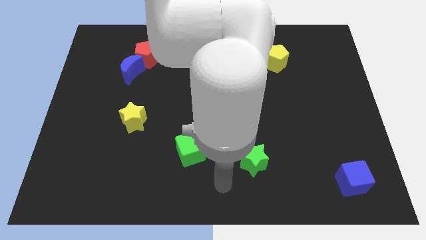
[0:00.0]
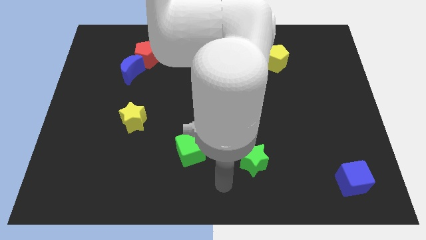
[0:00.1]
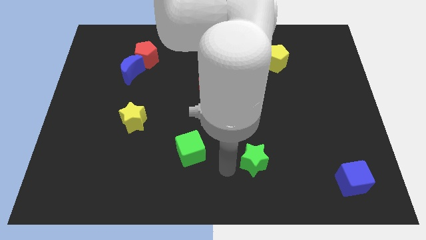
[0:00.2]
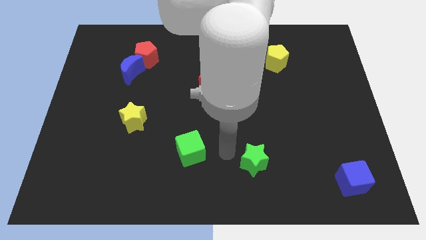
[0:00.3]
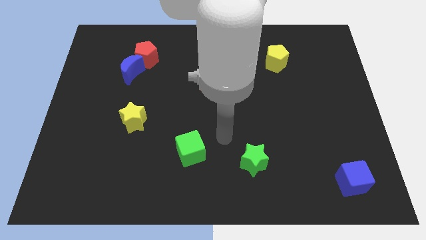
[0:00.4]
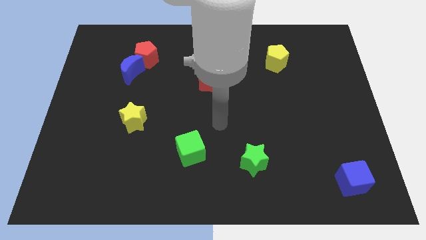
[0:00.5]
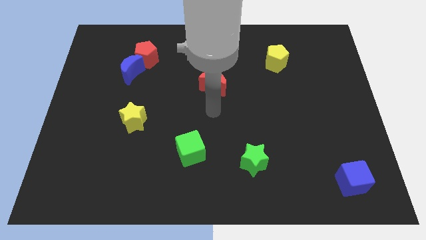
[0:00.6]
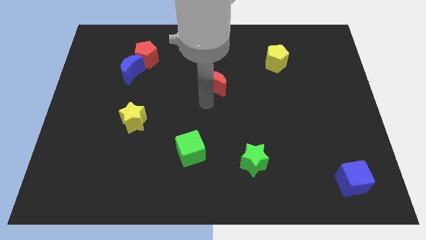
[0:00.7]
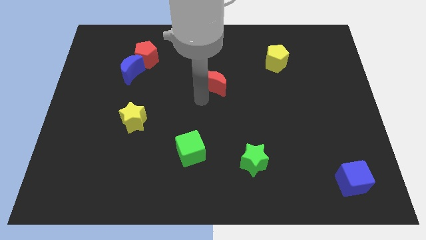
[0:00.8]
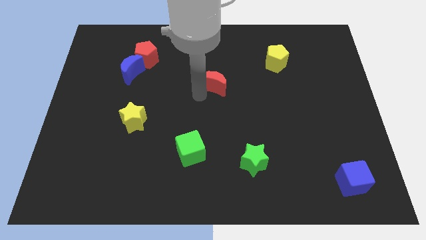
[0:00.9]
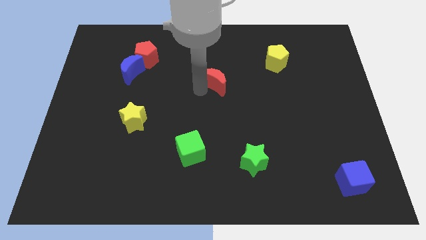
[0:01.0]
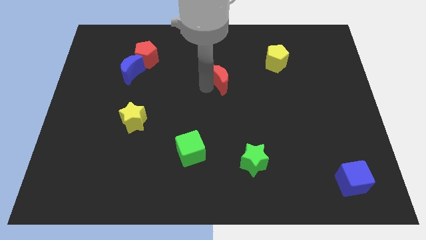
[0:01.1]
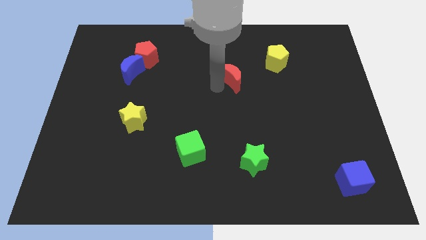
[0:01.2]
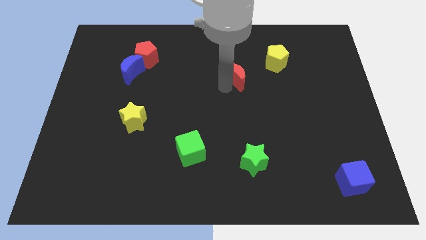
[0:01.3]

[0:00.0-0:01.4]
point your arm close to red moon

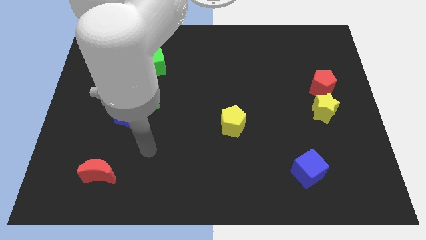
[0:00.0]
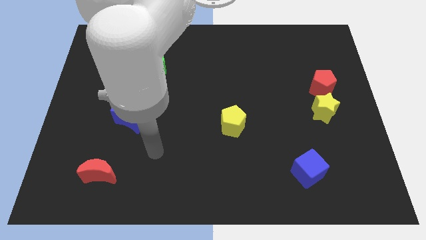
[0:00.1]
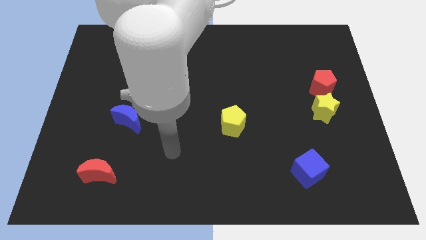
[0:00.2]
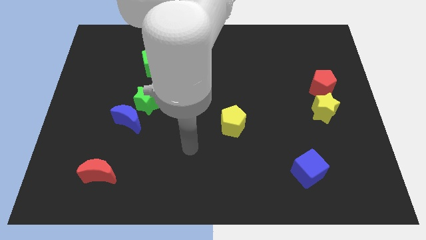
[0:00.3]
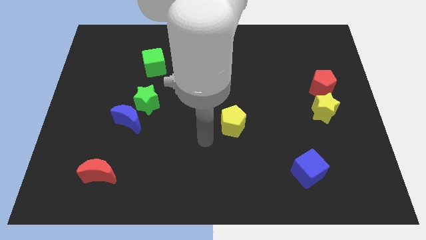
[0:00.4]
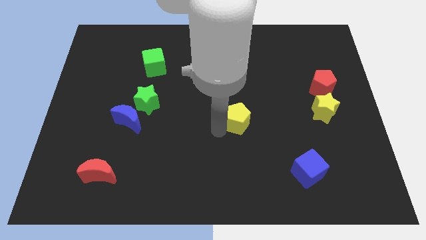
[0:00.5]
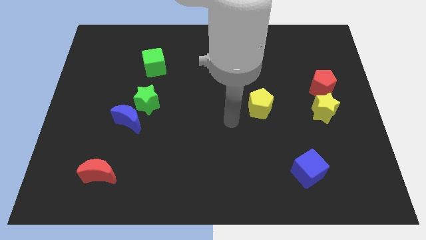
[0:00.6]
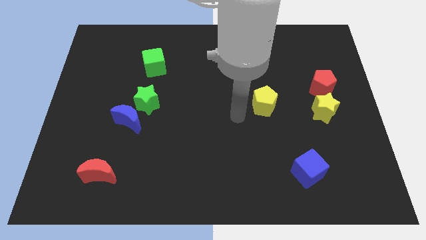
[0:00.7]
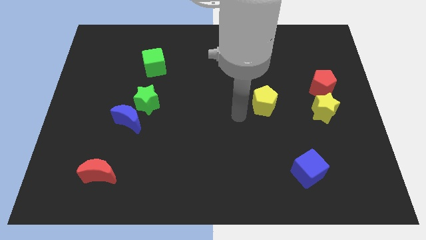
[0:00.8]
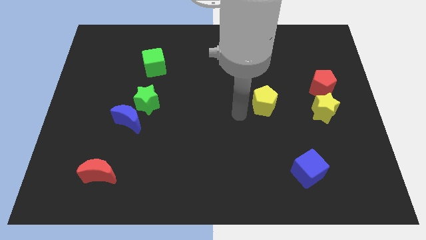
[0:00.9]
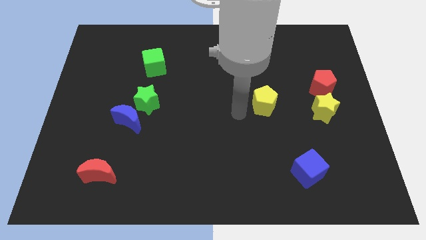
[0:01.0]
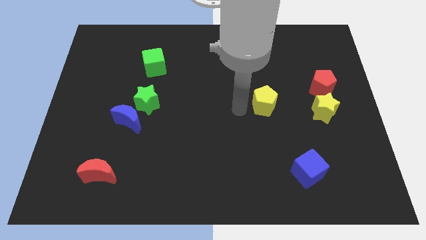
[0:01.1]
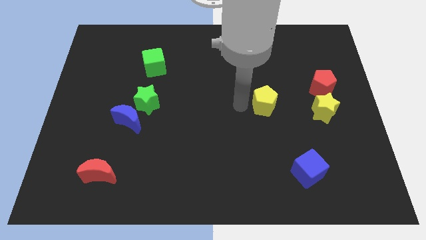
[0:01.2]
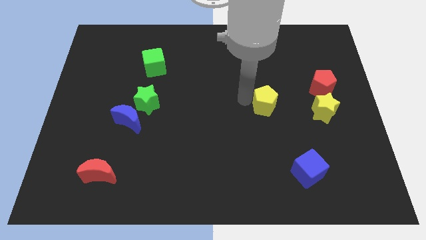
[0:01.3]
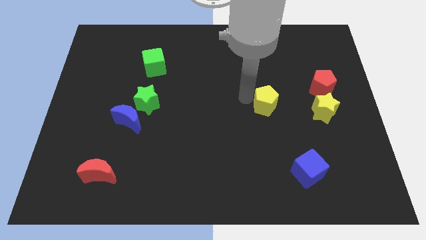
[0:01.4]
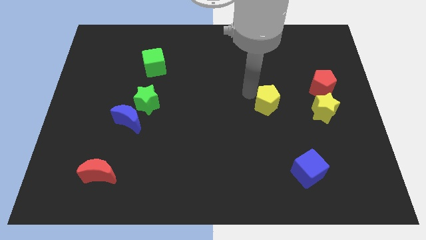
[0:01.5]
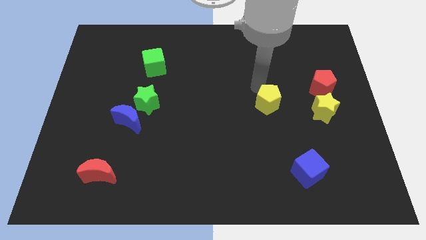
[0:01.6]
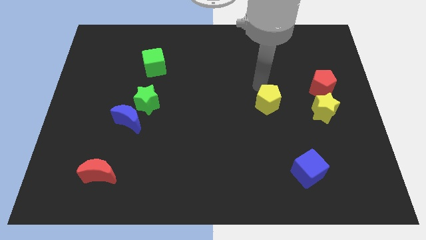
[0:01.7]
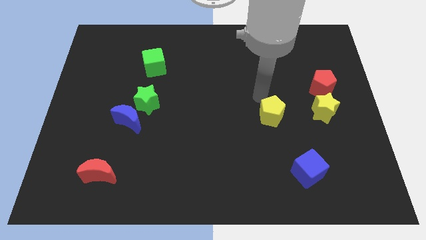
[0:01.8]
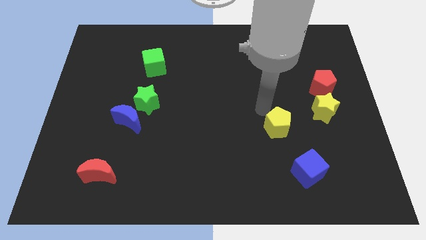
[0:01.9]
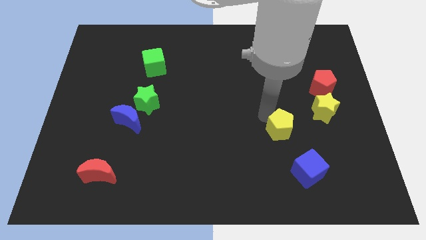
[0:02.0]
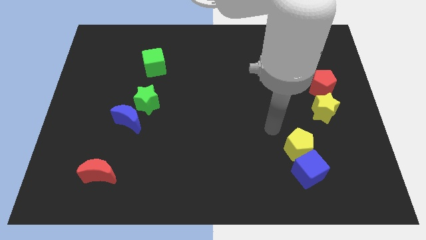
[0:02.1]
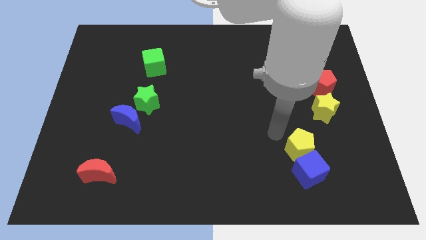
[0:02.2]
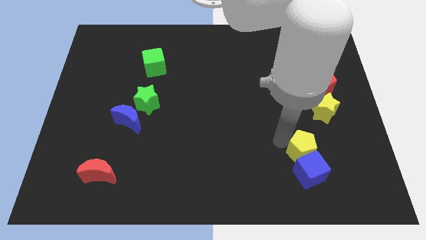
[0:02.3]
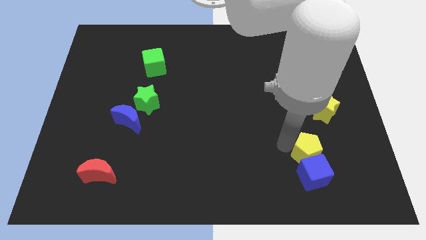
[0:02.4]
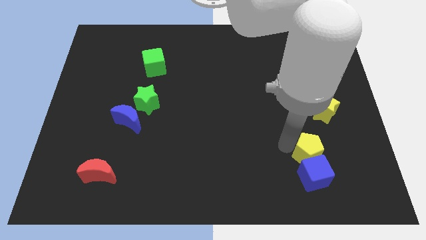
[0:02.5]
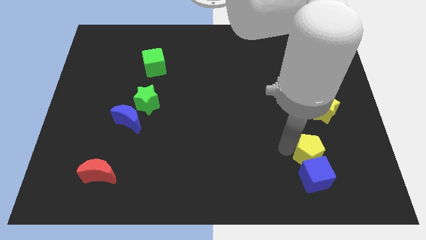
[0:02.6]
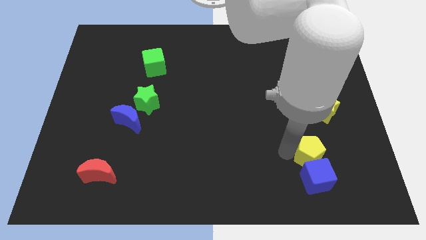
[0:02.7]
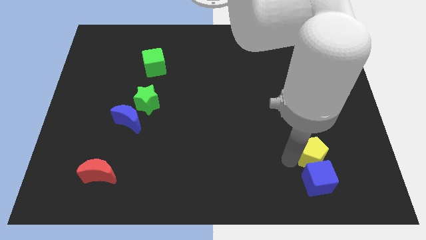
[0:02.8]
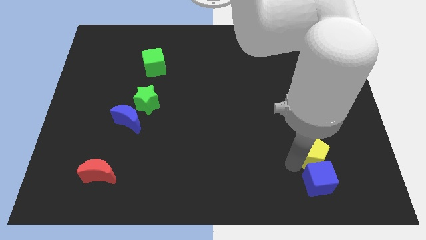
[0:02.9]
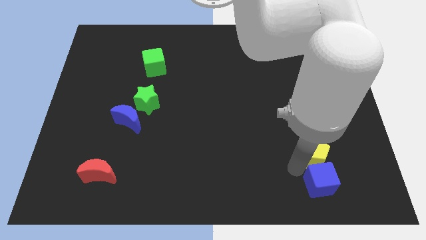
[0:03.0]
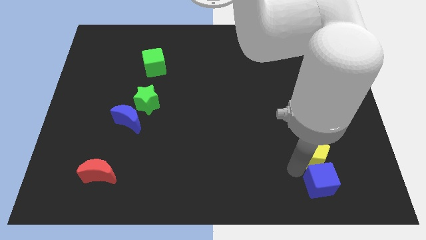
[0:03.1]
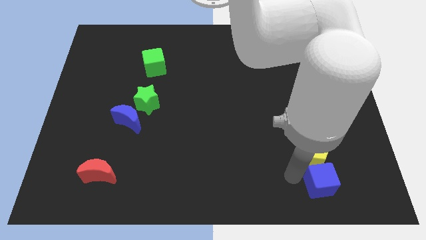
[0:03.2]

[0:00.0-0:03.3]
push the yellow pentagon into the blue cube

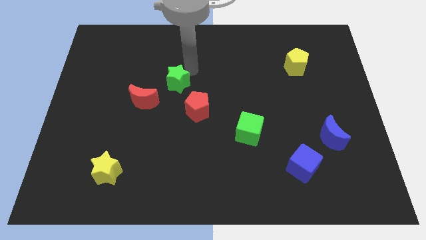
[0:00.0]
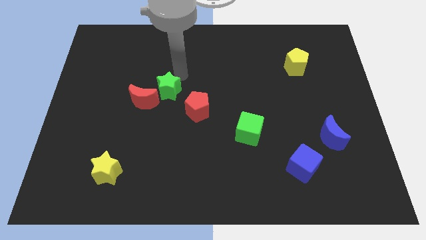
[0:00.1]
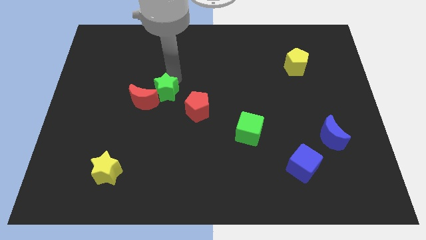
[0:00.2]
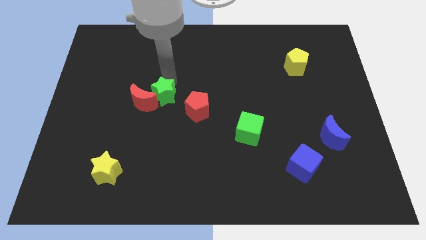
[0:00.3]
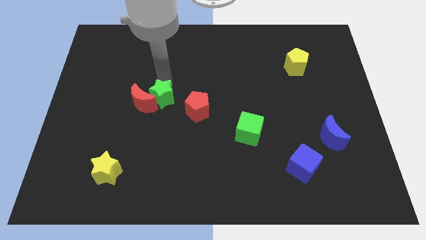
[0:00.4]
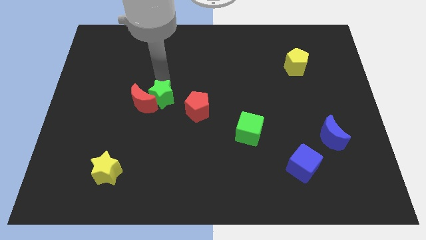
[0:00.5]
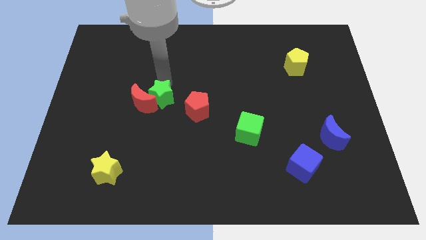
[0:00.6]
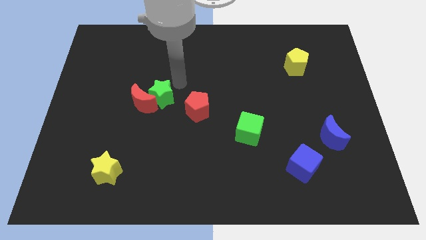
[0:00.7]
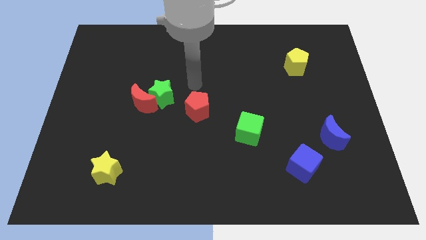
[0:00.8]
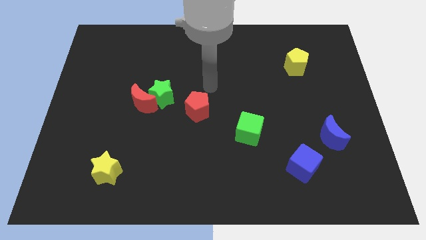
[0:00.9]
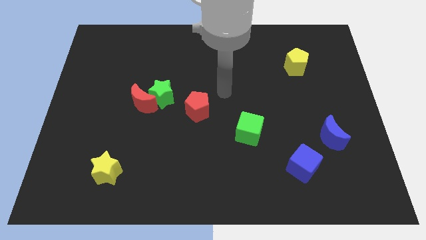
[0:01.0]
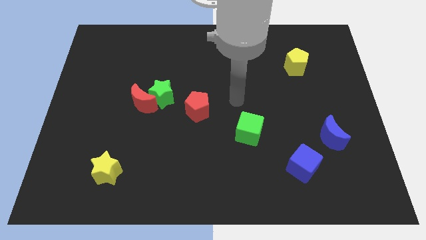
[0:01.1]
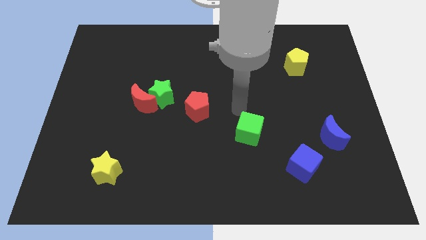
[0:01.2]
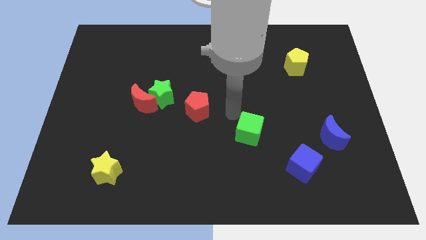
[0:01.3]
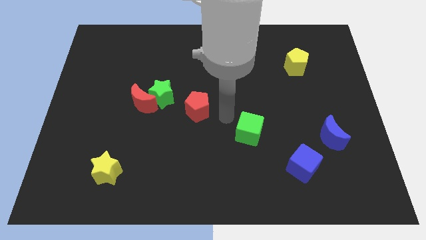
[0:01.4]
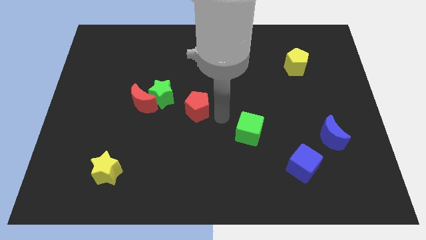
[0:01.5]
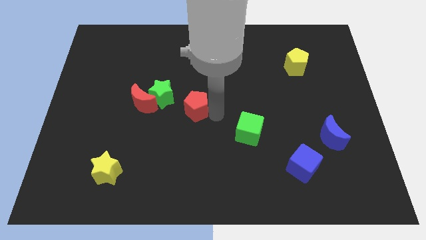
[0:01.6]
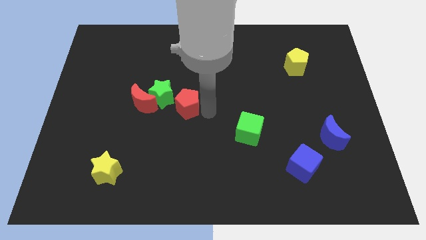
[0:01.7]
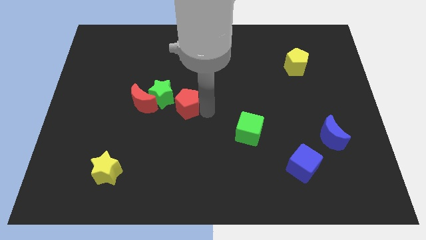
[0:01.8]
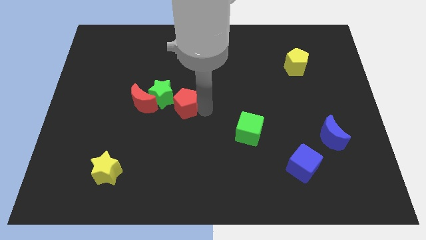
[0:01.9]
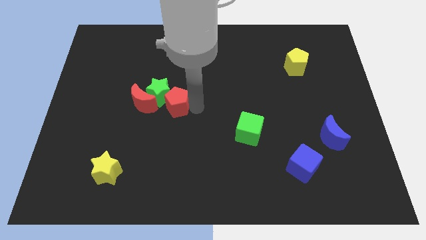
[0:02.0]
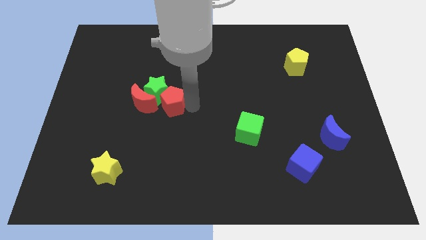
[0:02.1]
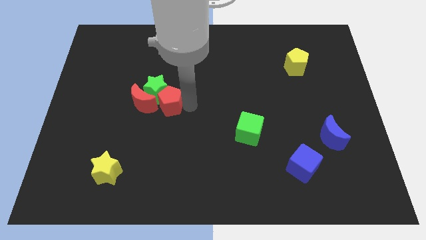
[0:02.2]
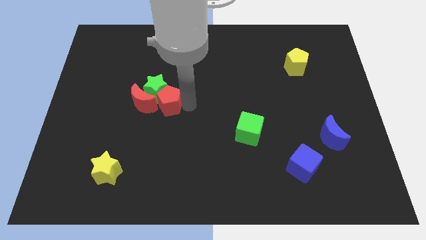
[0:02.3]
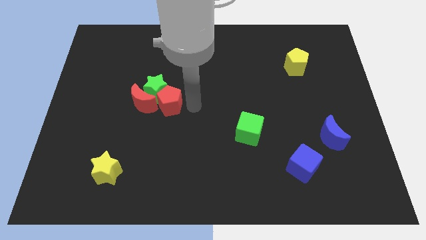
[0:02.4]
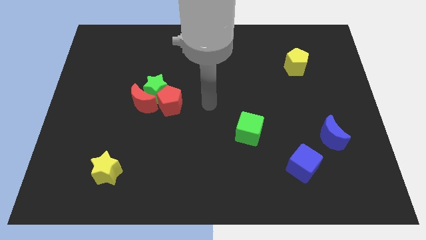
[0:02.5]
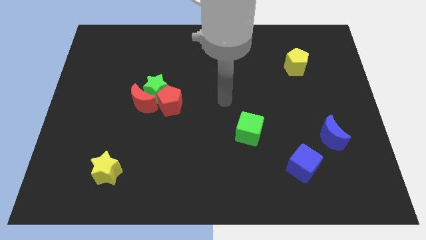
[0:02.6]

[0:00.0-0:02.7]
slightly push the red crescent using green star while moving it again using the red pentagon

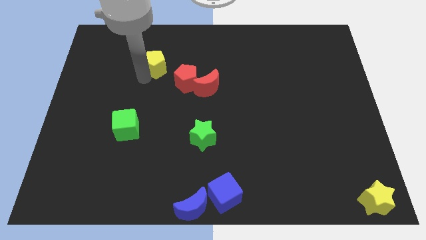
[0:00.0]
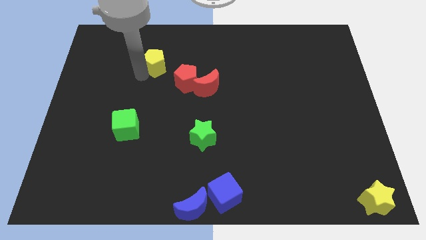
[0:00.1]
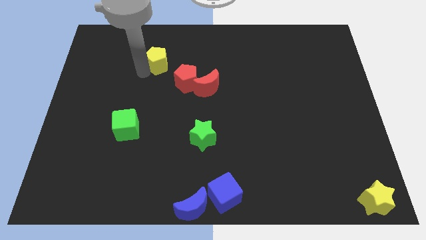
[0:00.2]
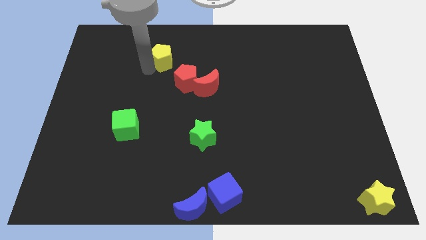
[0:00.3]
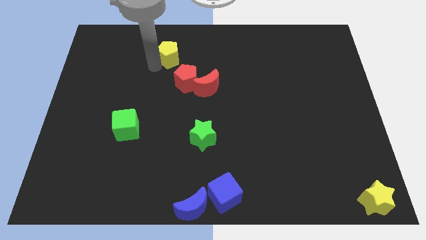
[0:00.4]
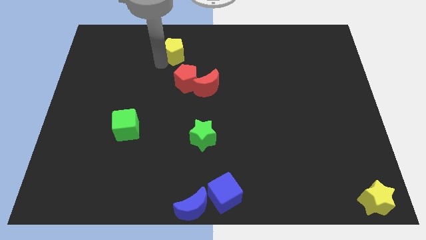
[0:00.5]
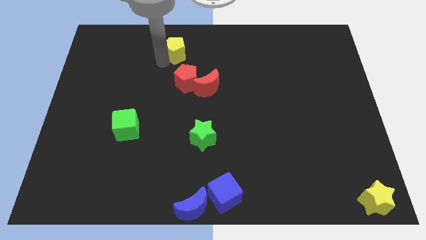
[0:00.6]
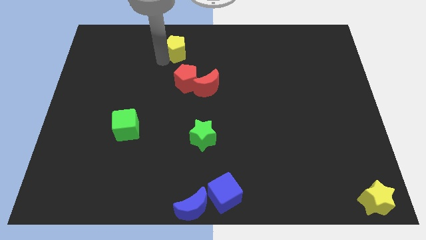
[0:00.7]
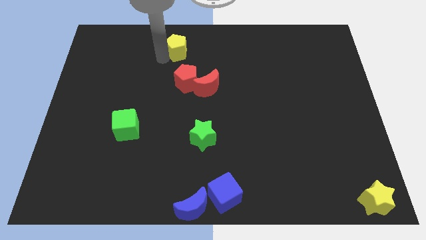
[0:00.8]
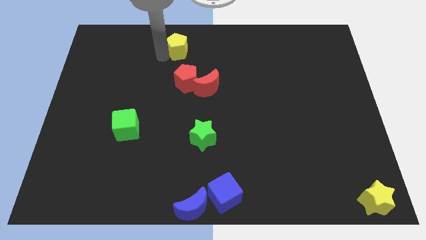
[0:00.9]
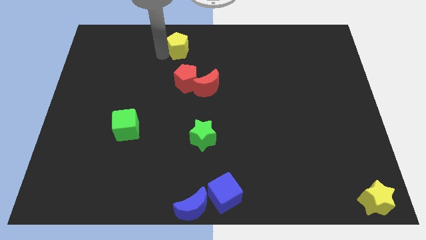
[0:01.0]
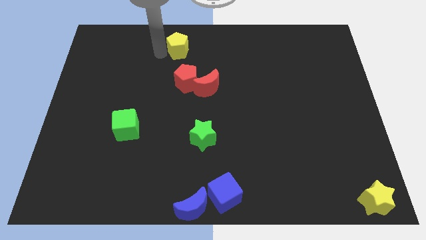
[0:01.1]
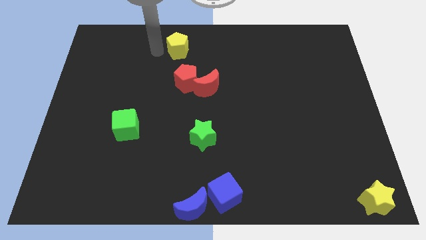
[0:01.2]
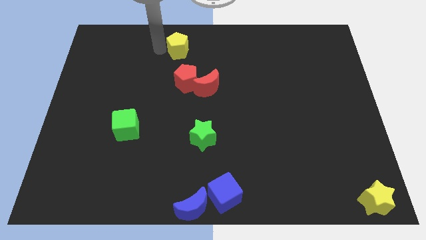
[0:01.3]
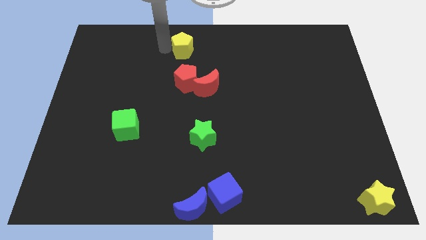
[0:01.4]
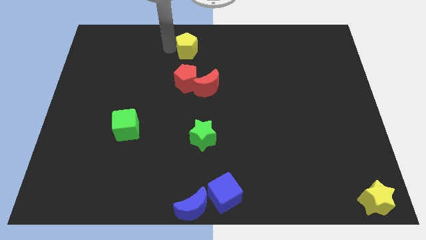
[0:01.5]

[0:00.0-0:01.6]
place yellow pentagon vertical to red pentagon
